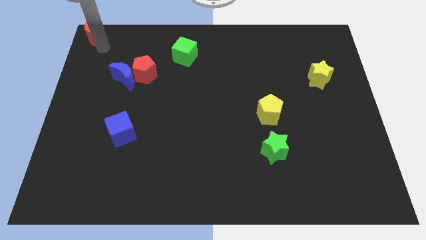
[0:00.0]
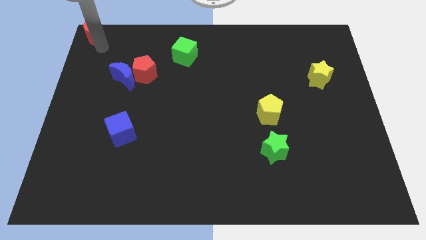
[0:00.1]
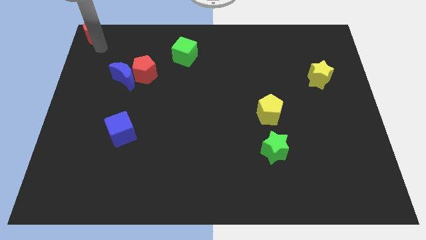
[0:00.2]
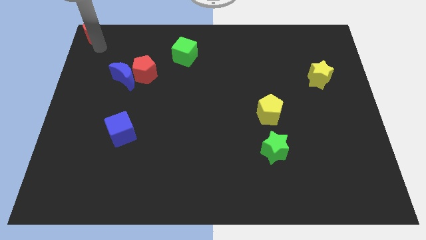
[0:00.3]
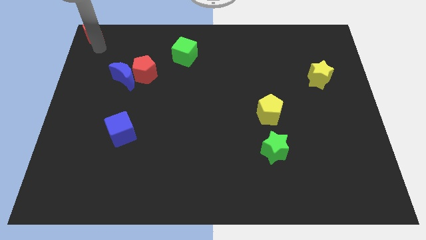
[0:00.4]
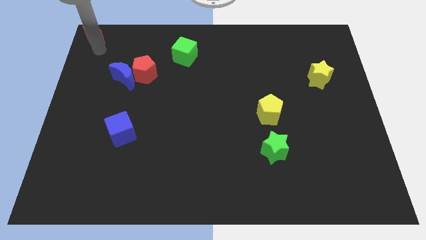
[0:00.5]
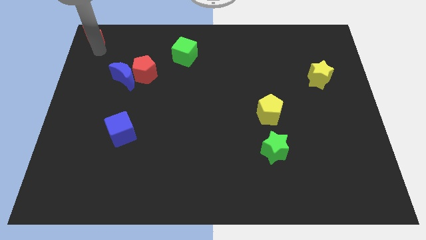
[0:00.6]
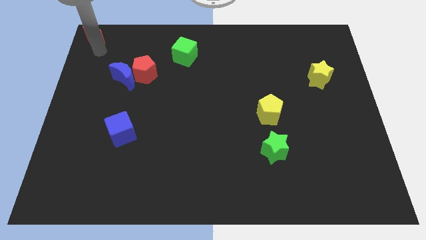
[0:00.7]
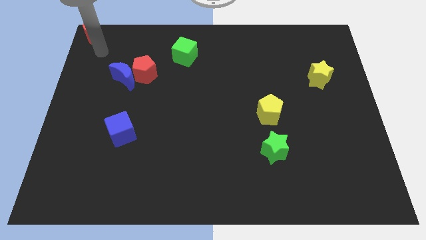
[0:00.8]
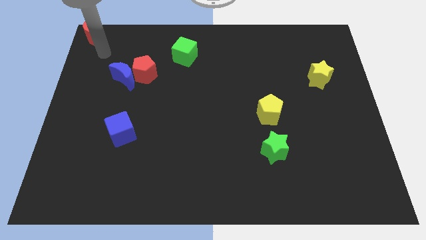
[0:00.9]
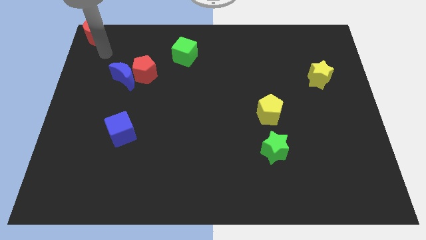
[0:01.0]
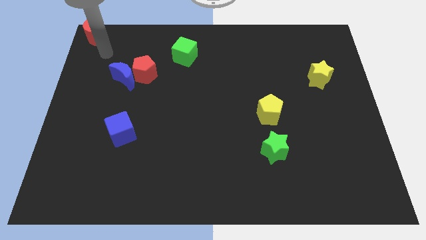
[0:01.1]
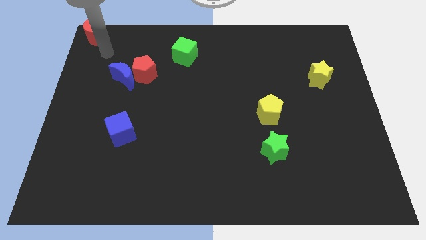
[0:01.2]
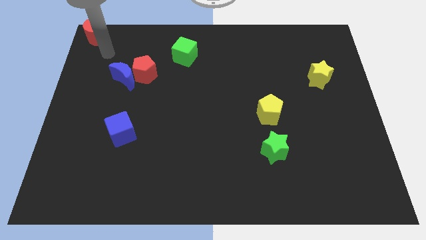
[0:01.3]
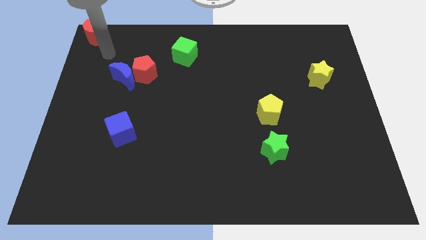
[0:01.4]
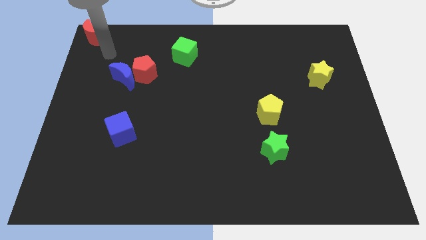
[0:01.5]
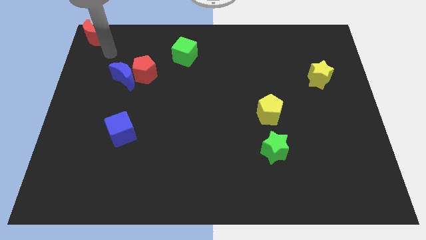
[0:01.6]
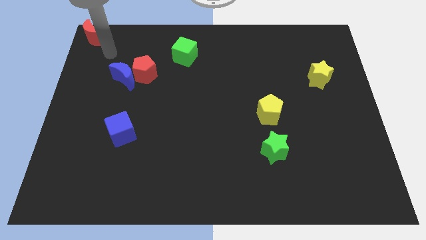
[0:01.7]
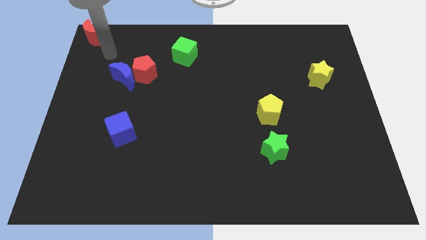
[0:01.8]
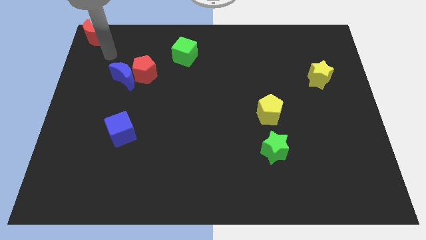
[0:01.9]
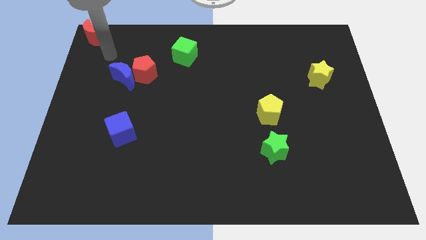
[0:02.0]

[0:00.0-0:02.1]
slide red moon to the top left

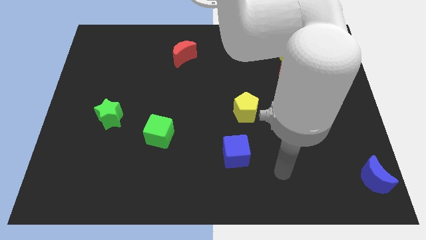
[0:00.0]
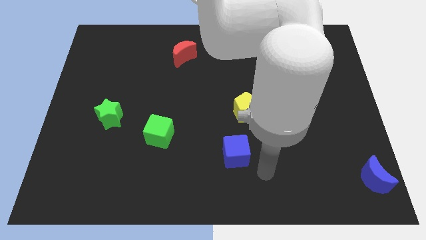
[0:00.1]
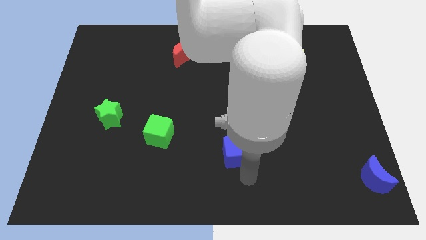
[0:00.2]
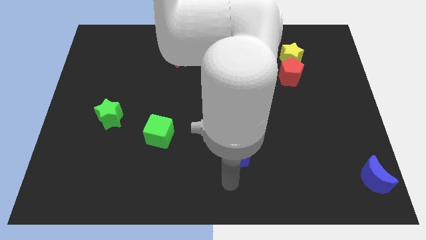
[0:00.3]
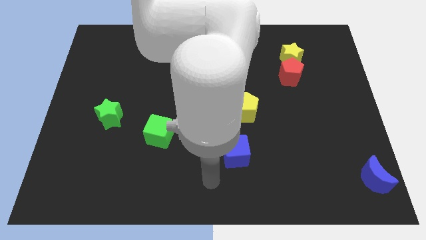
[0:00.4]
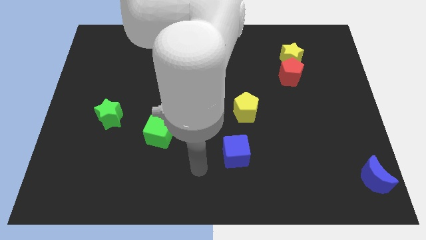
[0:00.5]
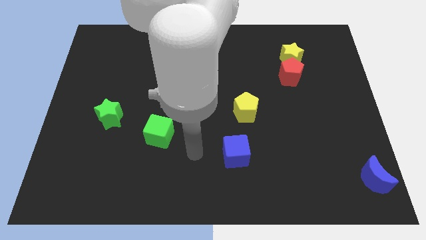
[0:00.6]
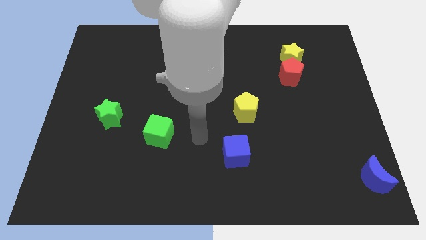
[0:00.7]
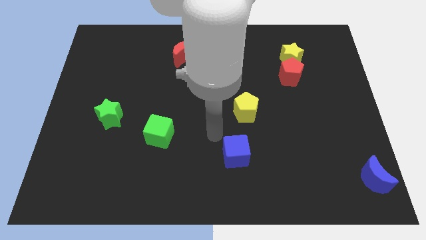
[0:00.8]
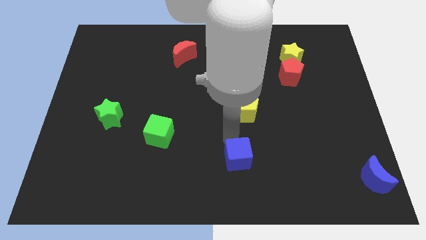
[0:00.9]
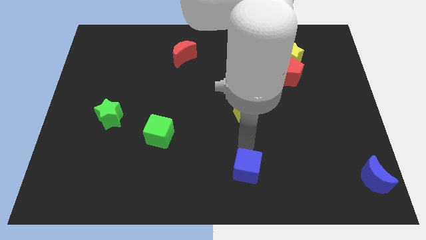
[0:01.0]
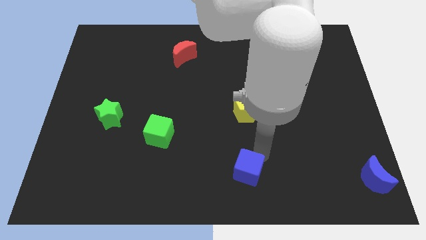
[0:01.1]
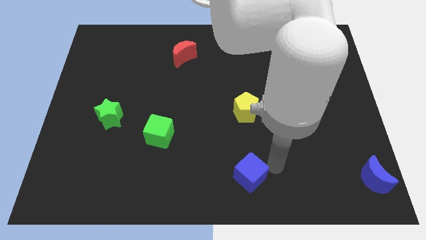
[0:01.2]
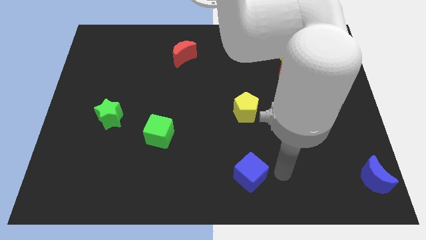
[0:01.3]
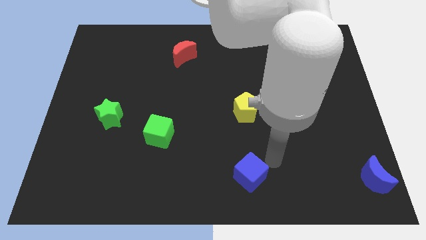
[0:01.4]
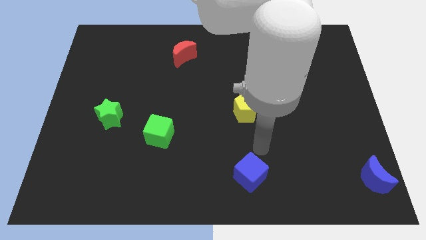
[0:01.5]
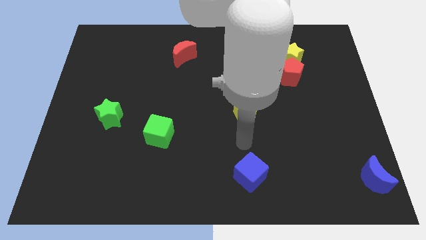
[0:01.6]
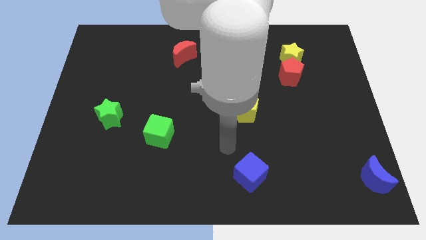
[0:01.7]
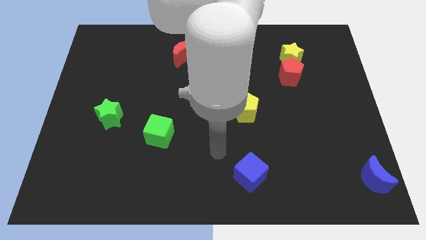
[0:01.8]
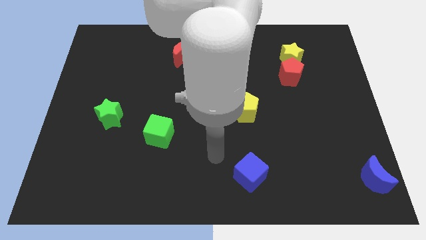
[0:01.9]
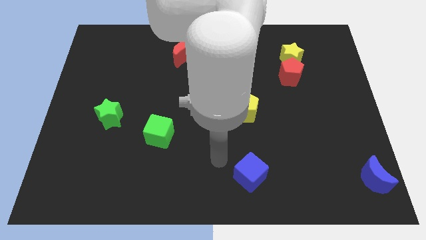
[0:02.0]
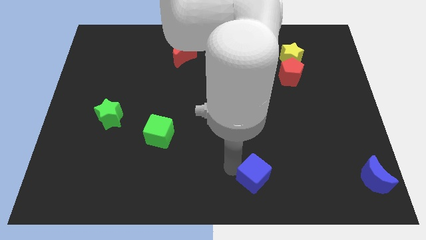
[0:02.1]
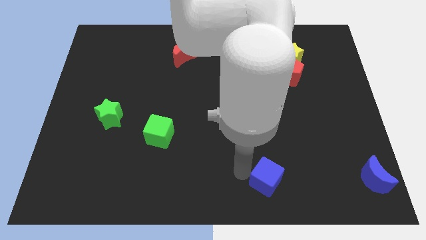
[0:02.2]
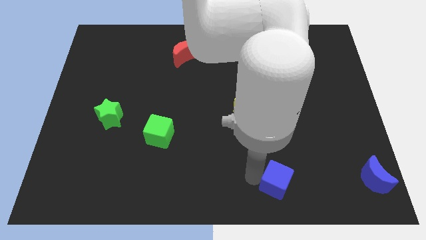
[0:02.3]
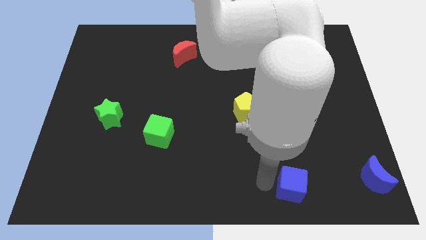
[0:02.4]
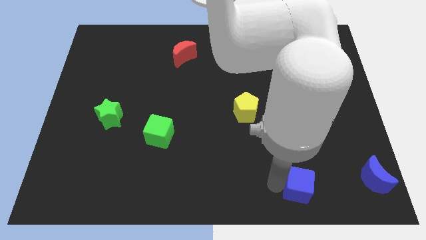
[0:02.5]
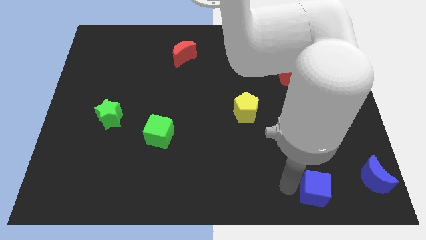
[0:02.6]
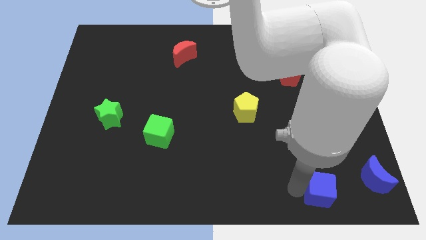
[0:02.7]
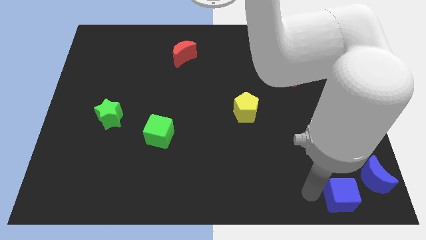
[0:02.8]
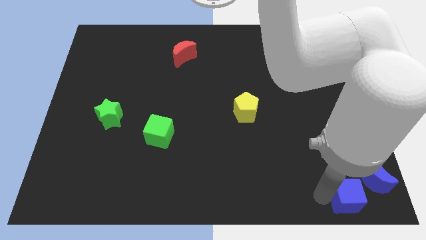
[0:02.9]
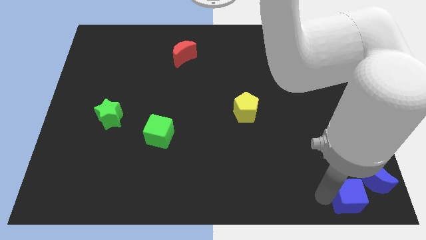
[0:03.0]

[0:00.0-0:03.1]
place the blue cube beside the blue crescent

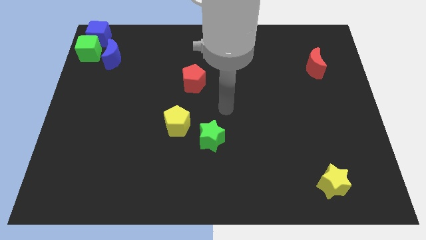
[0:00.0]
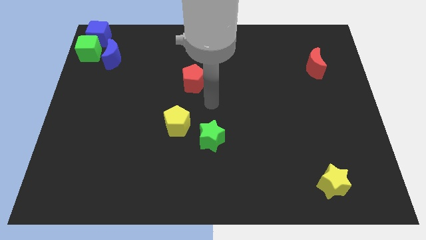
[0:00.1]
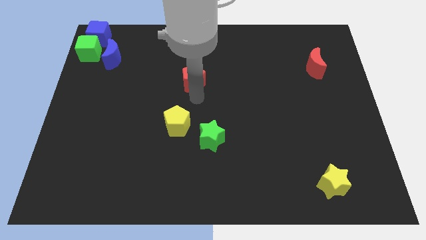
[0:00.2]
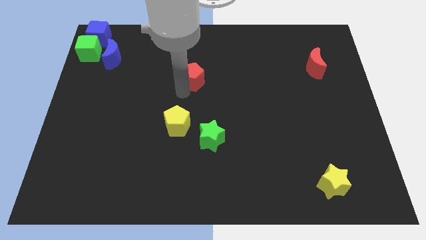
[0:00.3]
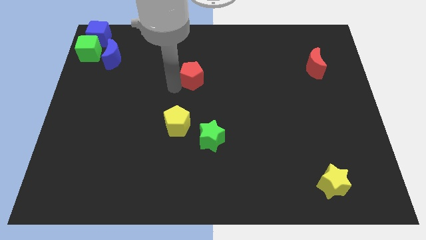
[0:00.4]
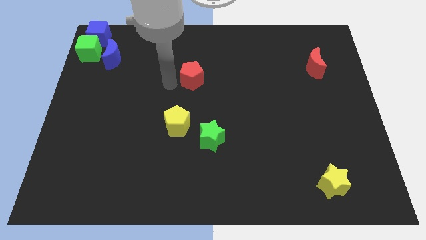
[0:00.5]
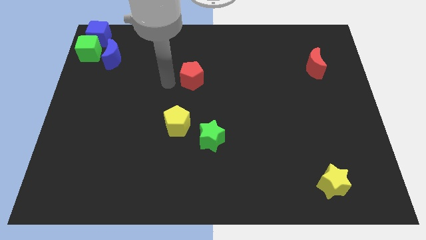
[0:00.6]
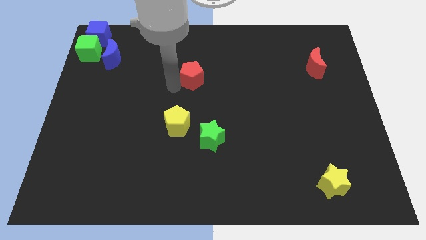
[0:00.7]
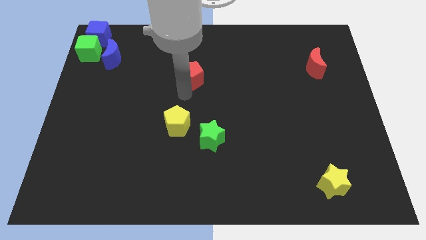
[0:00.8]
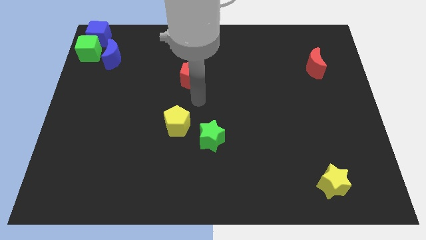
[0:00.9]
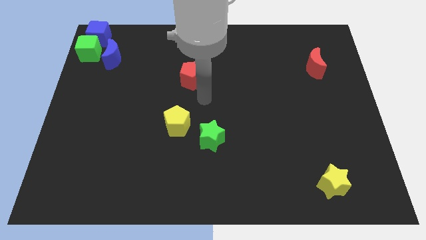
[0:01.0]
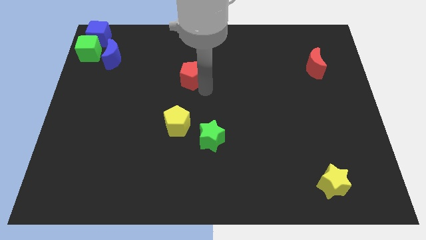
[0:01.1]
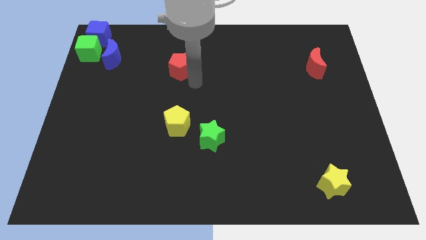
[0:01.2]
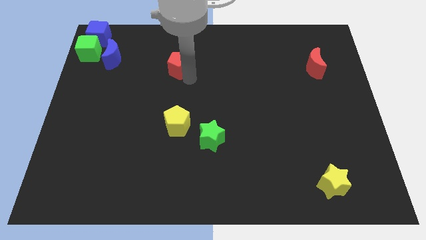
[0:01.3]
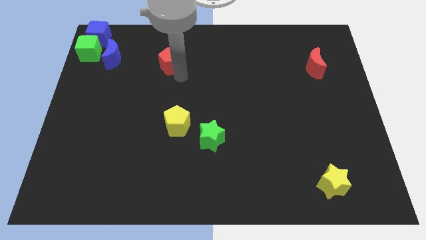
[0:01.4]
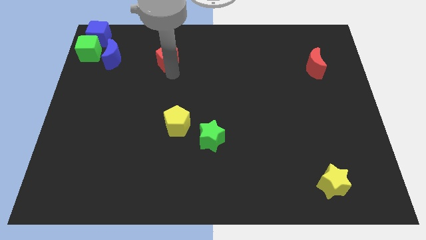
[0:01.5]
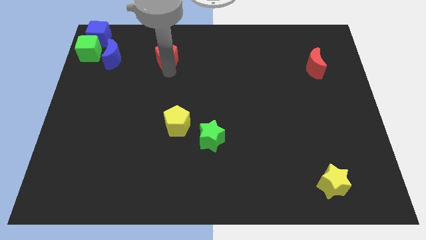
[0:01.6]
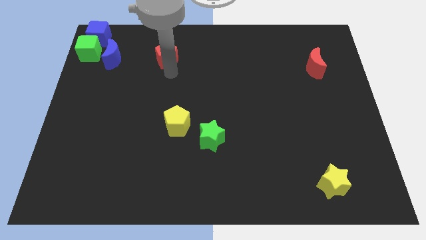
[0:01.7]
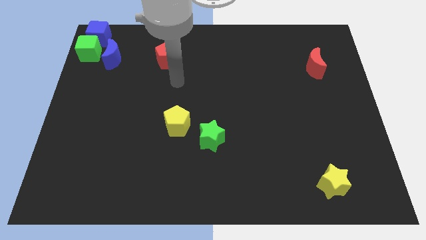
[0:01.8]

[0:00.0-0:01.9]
move the red pentagon up slightly

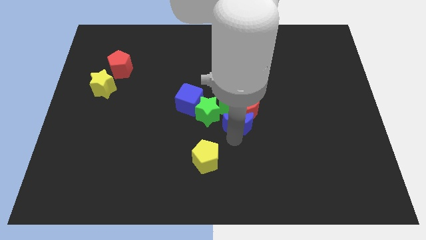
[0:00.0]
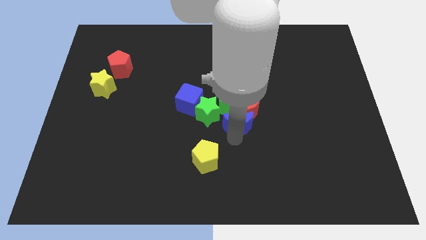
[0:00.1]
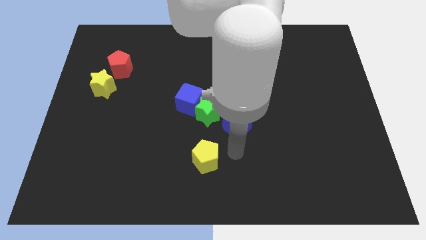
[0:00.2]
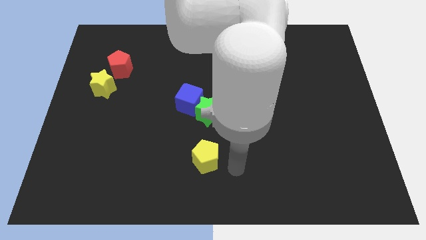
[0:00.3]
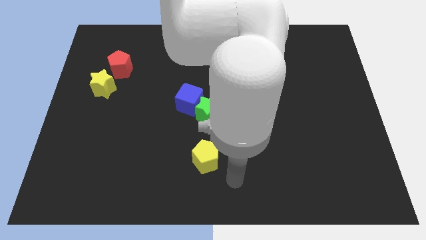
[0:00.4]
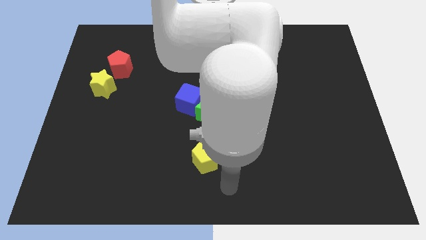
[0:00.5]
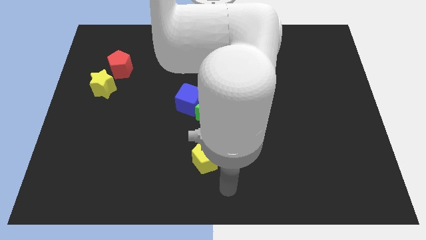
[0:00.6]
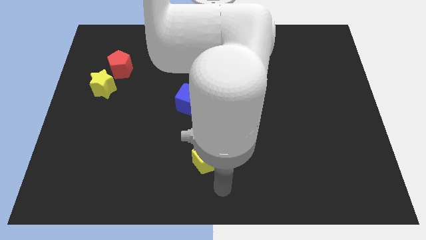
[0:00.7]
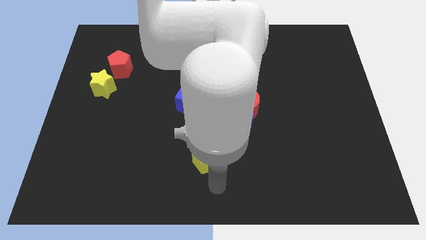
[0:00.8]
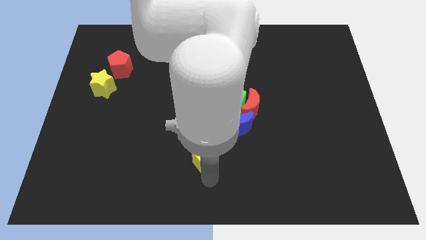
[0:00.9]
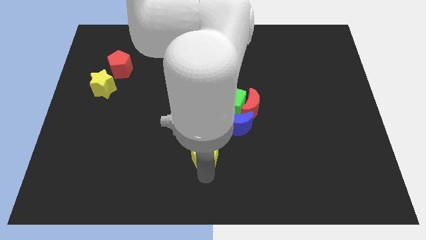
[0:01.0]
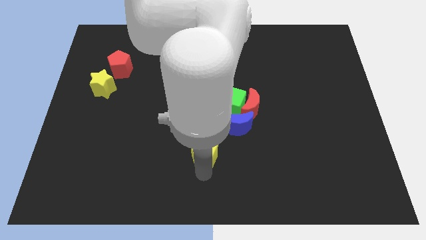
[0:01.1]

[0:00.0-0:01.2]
tap on the bottom side of the yellow pentagon

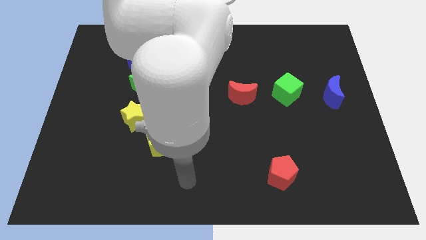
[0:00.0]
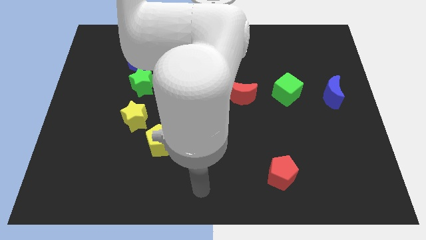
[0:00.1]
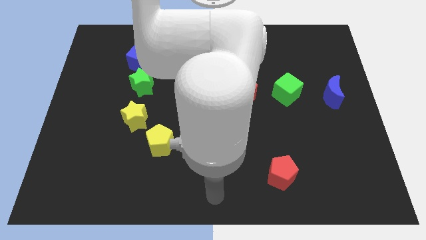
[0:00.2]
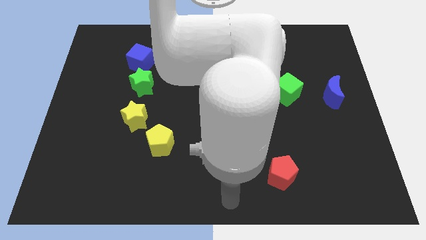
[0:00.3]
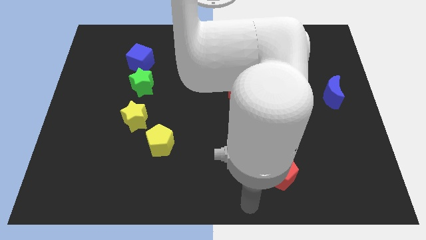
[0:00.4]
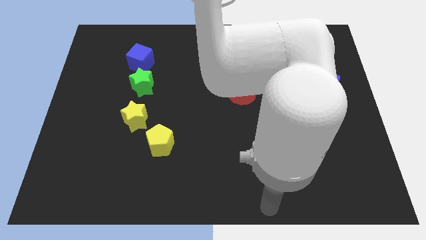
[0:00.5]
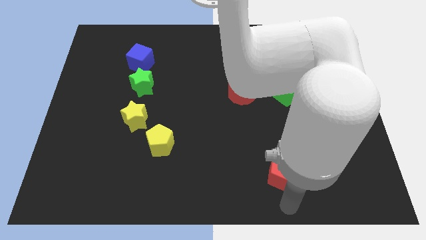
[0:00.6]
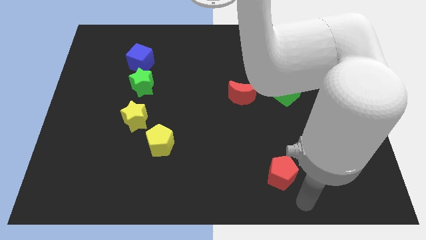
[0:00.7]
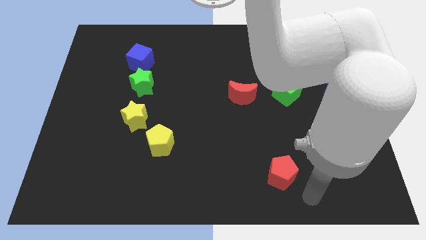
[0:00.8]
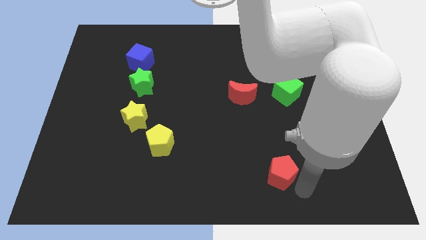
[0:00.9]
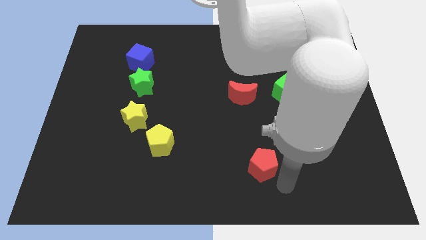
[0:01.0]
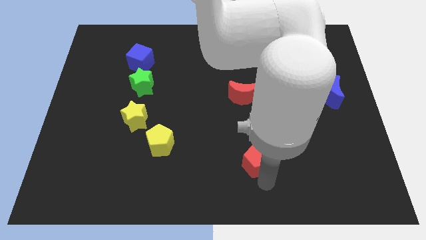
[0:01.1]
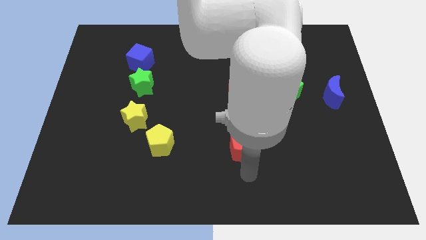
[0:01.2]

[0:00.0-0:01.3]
put red pentagon vertically below the red moon
